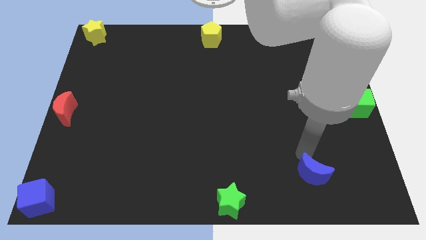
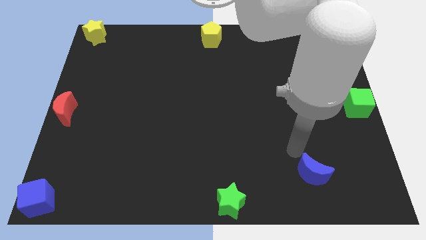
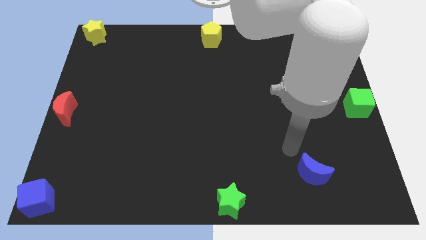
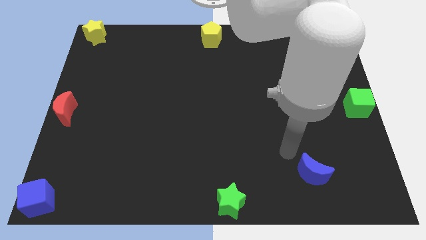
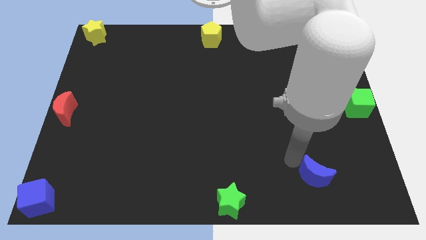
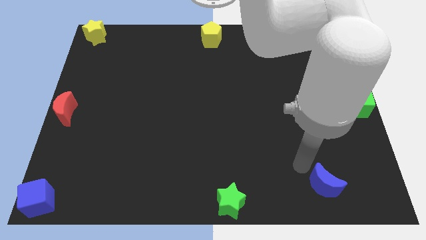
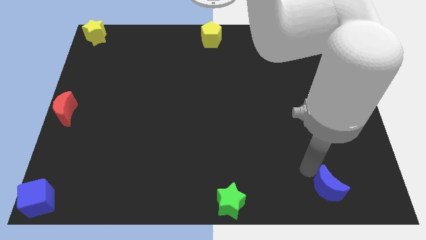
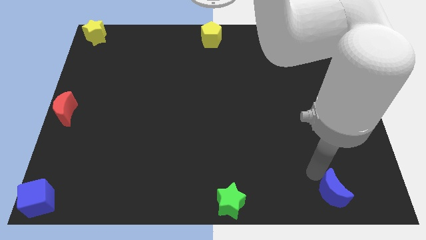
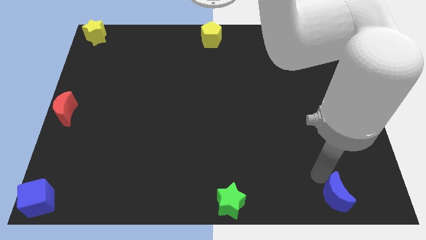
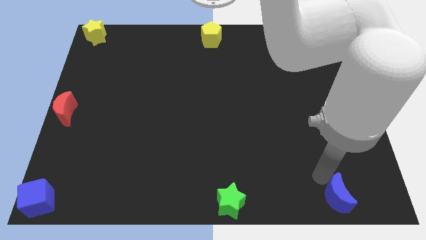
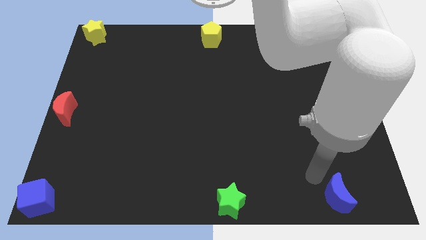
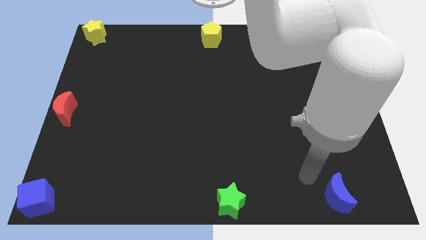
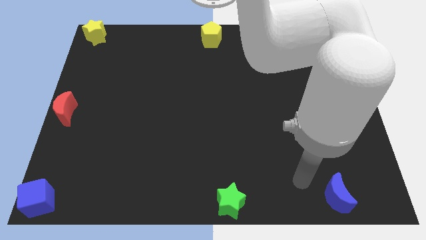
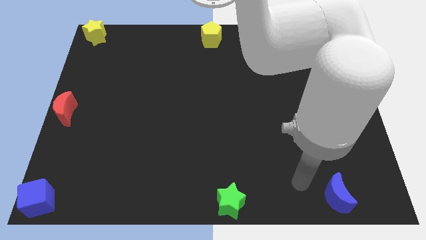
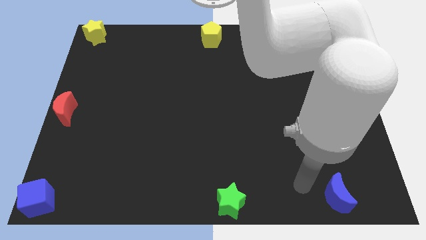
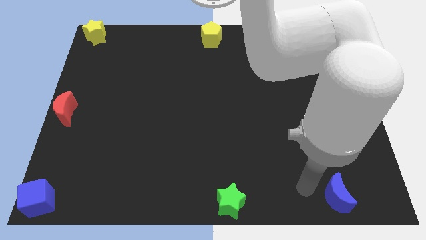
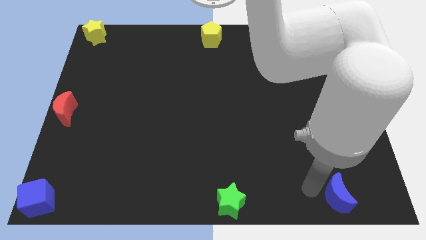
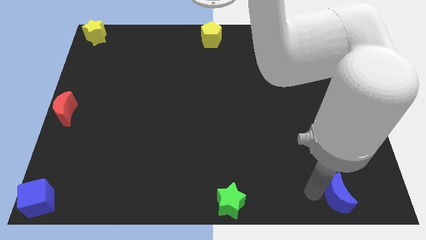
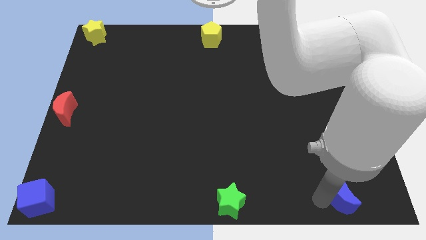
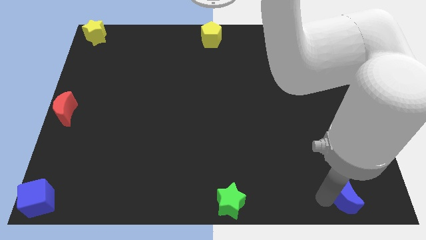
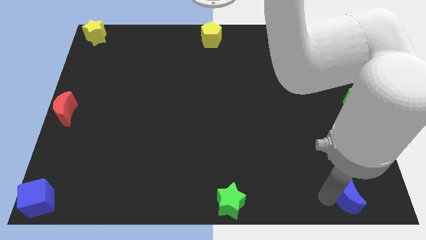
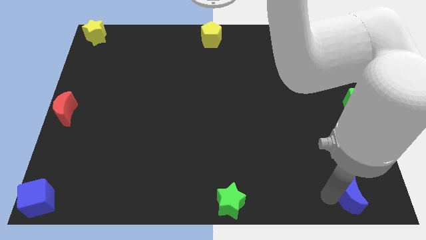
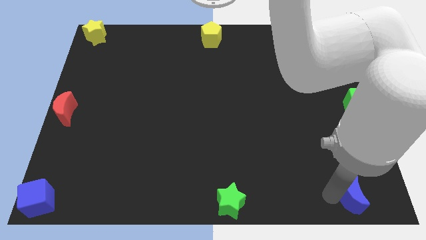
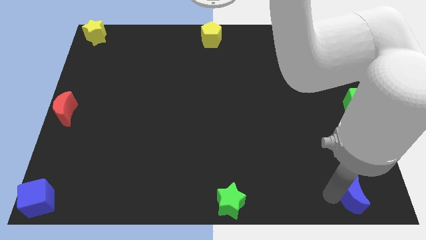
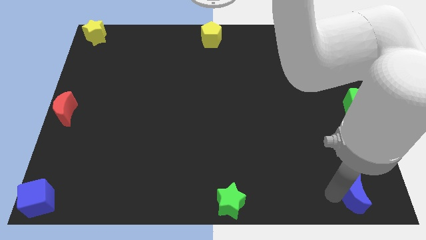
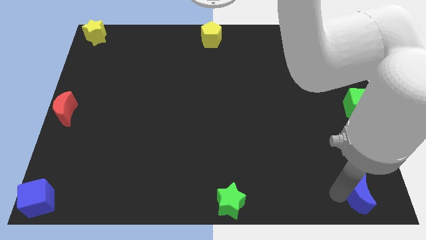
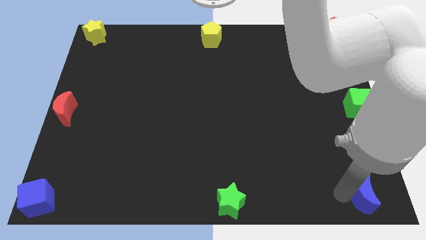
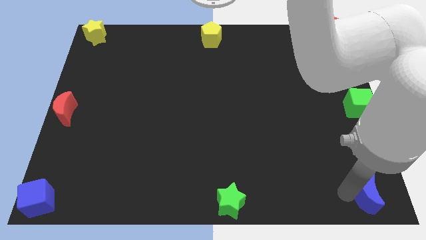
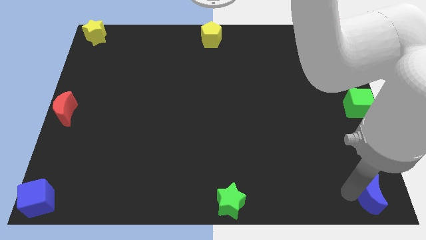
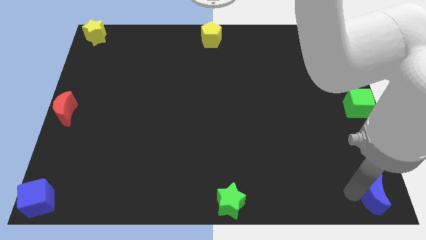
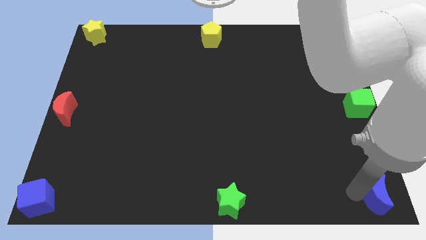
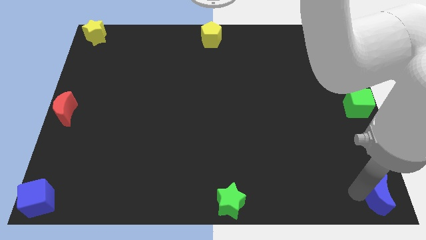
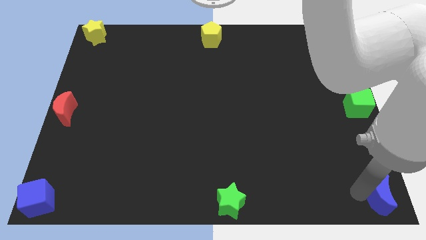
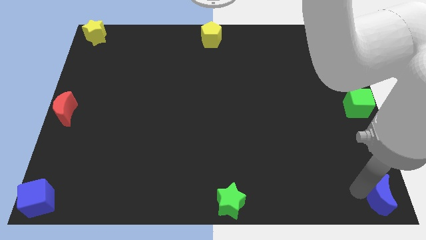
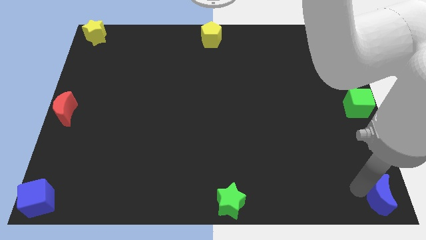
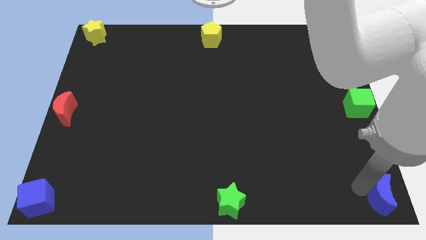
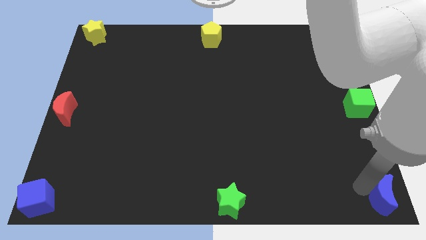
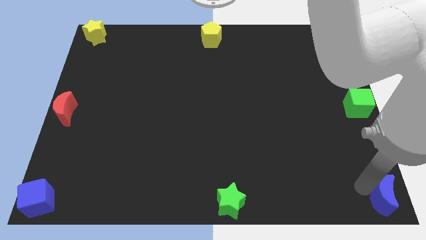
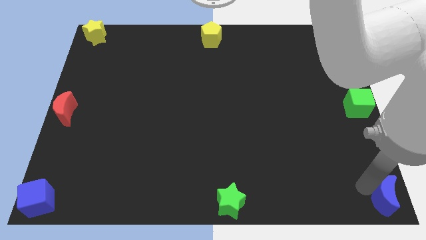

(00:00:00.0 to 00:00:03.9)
push blue crescent to the bottom right corner

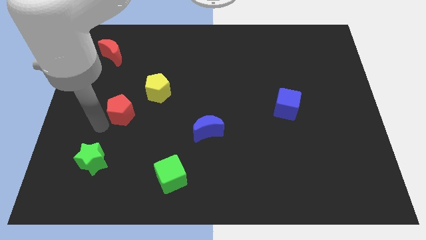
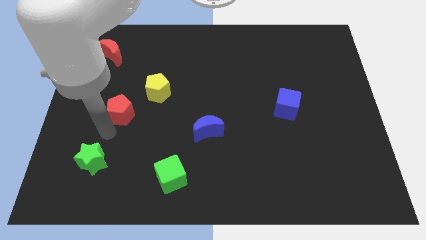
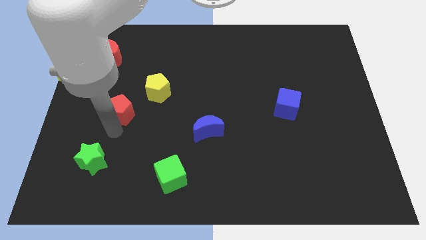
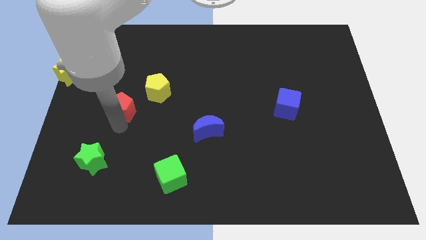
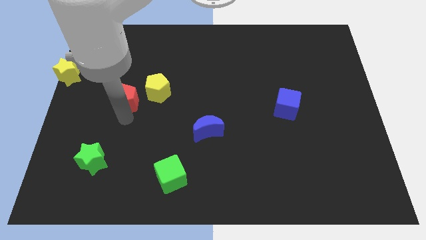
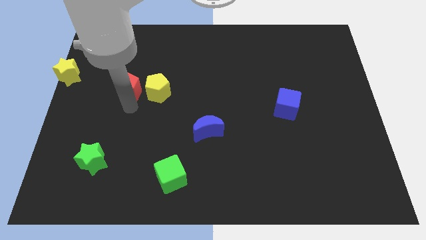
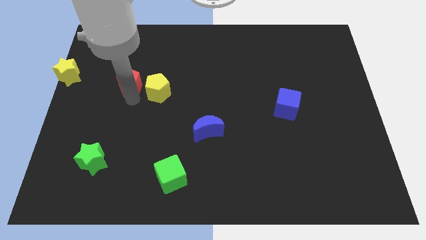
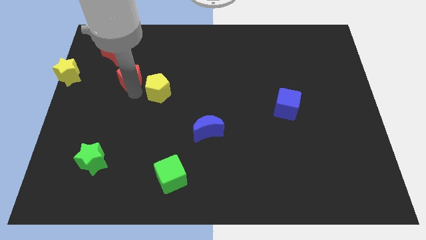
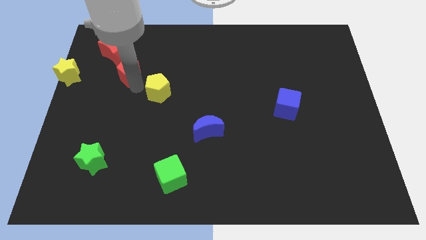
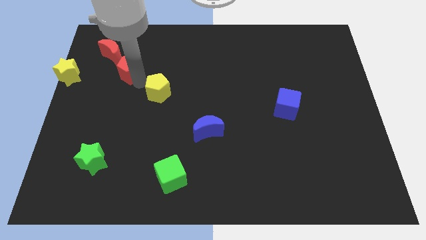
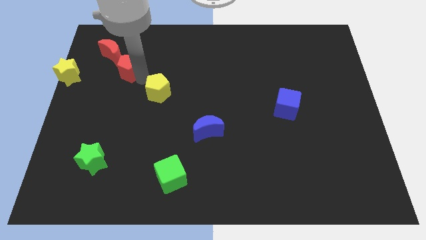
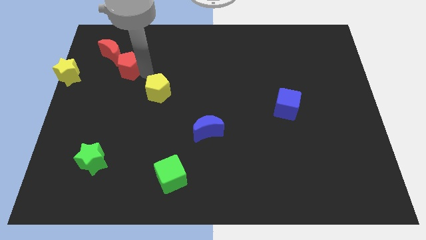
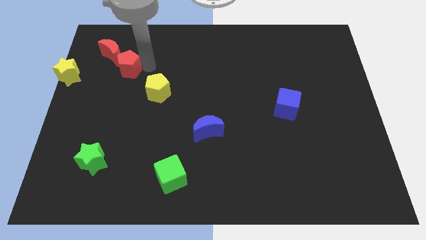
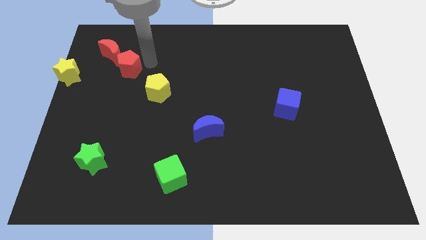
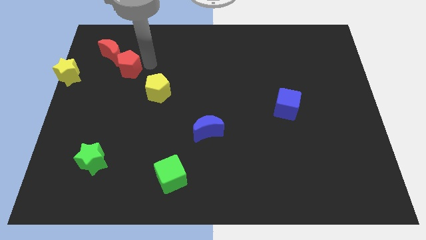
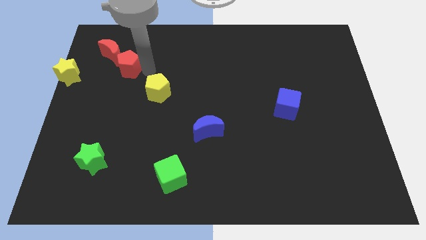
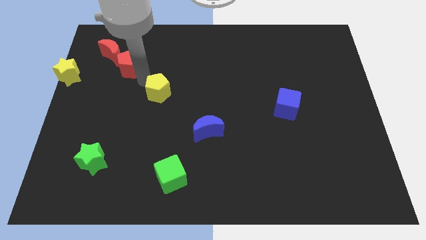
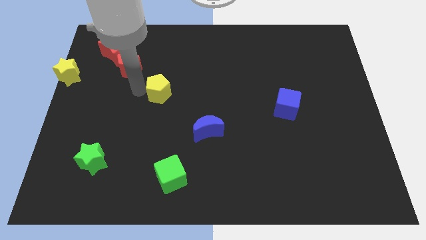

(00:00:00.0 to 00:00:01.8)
place the red pentagon towards the bottom right side of the red crescent

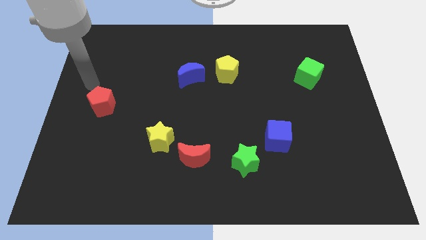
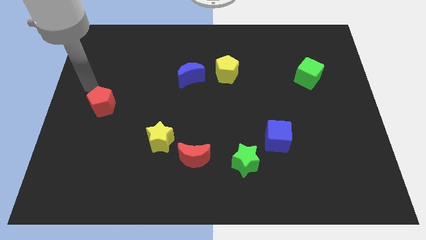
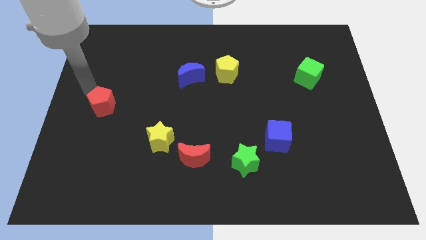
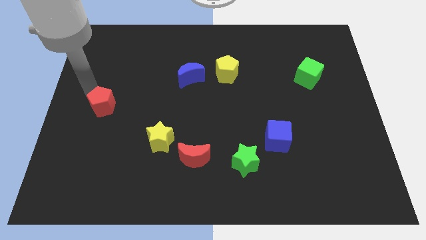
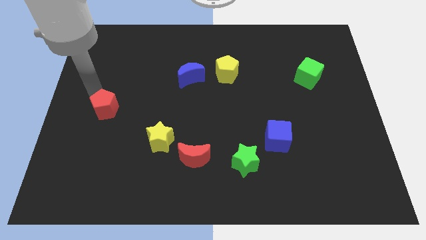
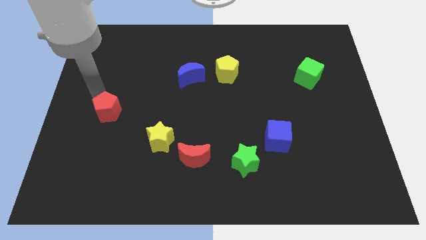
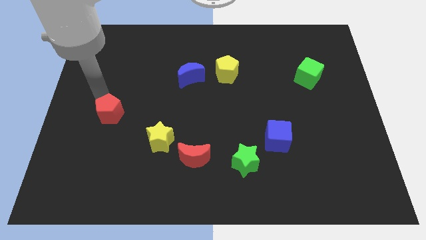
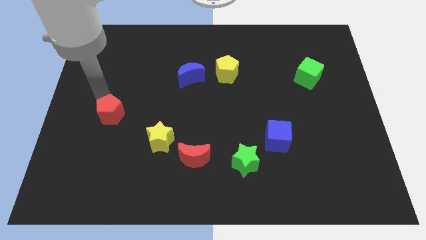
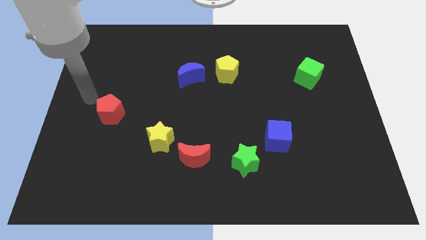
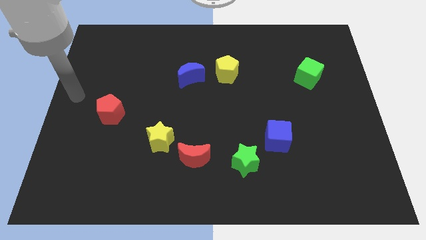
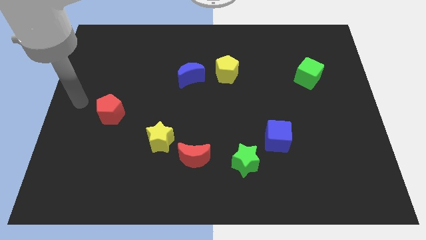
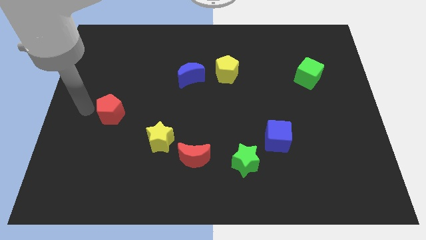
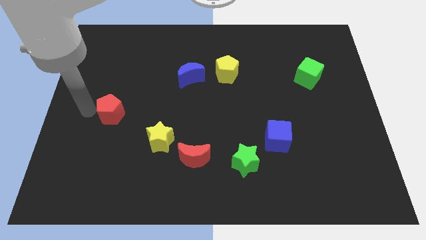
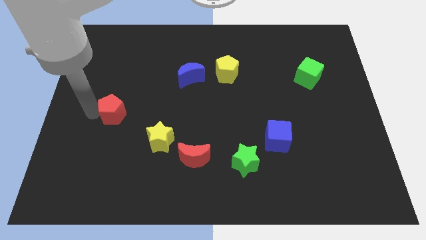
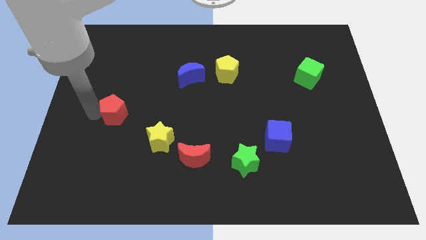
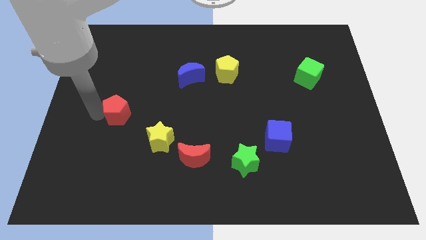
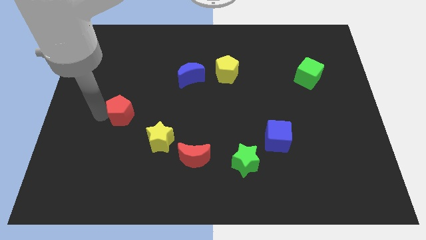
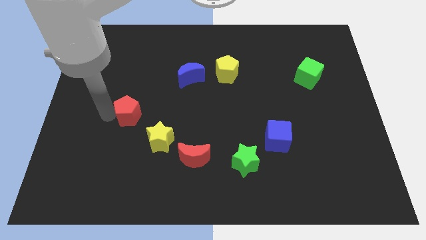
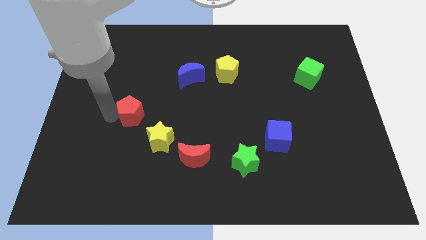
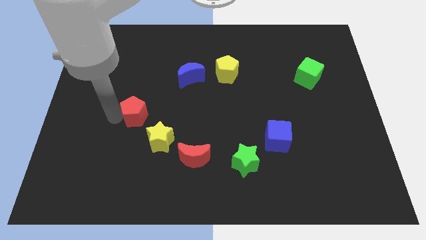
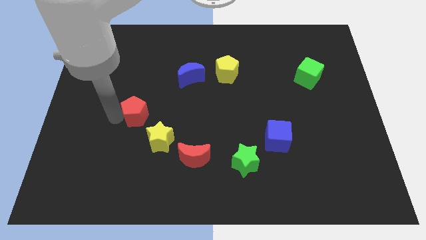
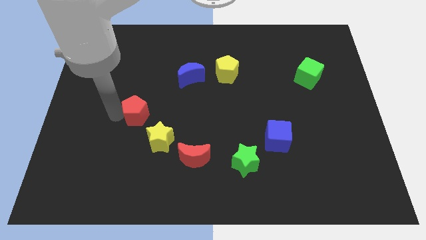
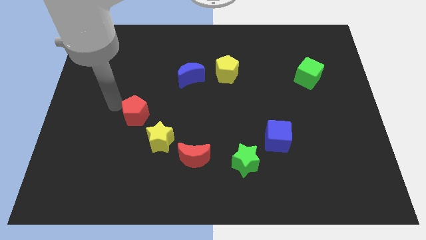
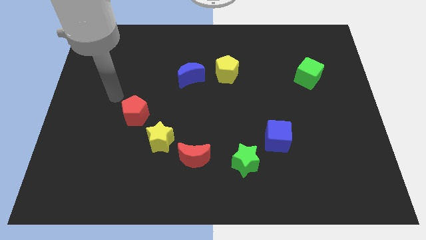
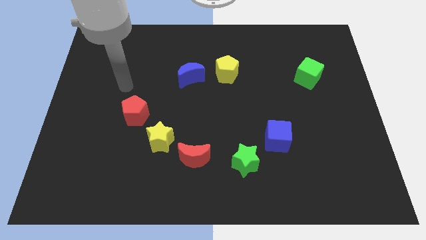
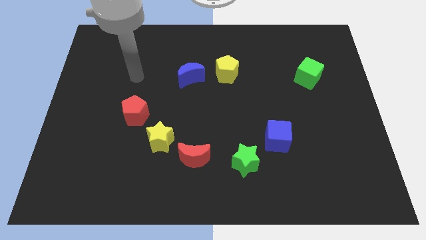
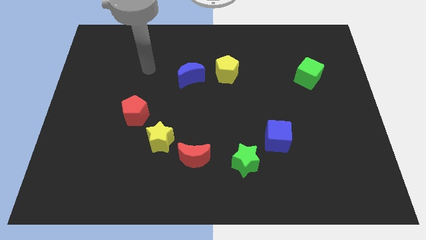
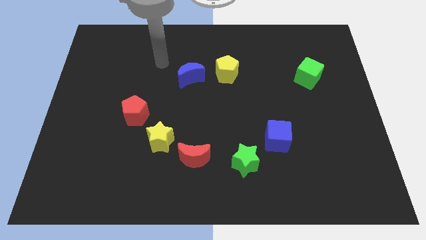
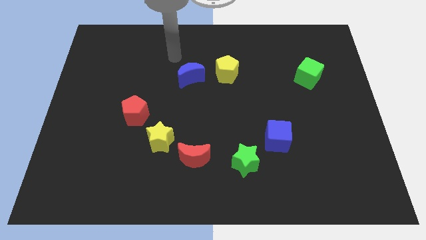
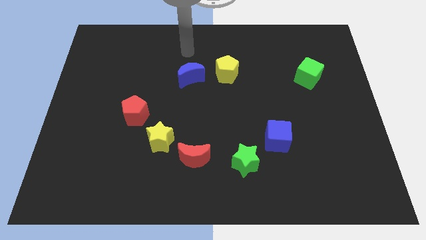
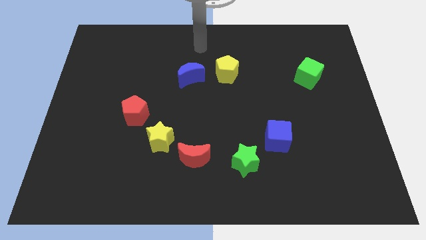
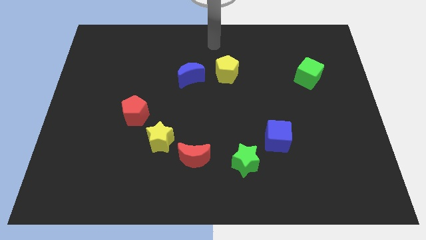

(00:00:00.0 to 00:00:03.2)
drag the red pentagon diagonally top left to yellow star

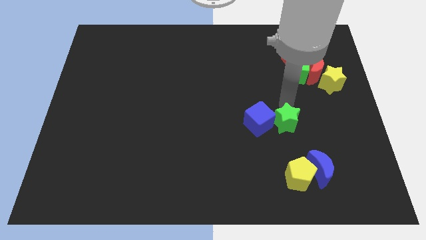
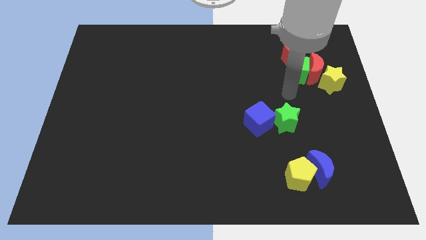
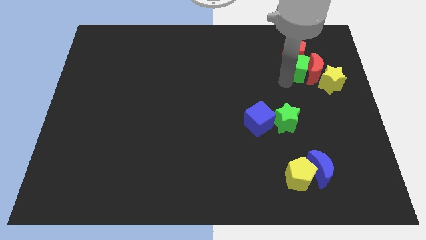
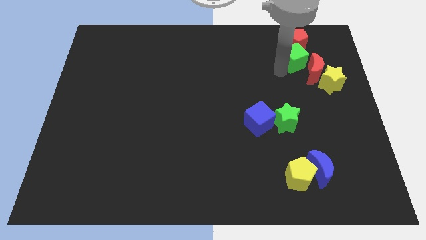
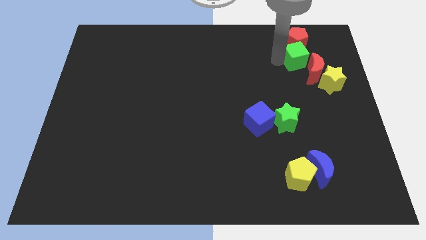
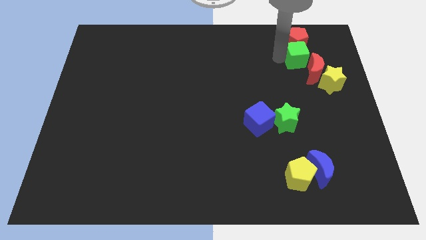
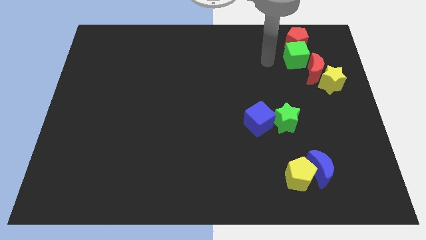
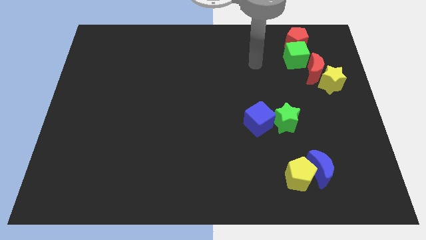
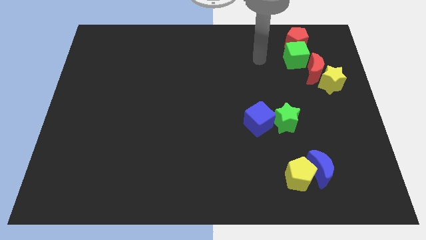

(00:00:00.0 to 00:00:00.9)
move the green cube slightly upwards
